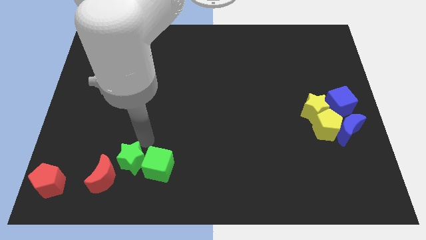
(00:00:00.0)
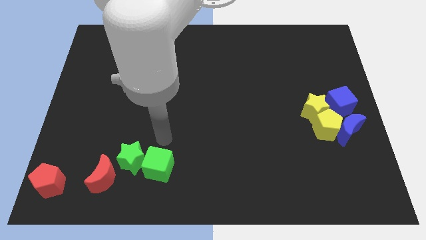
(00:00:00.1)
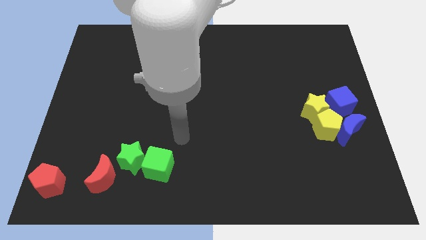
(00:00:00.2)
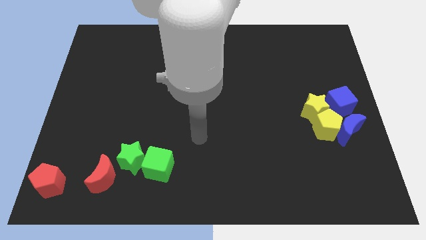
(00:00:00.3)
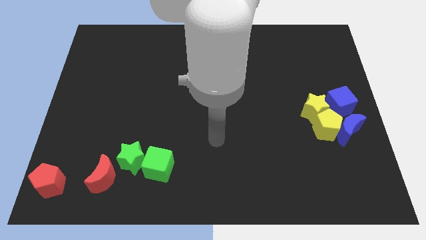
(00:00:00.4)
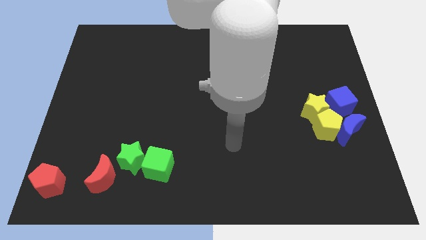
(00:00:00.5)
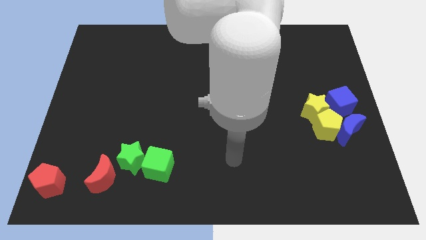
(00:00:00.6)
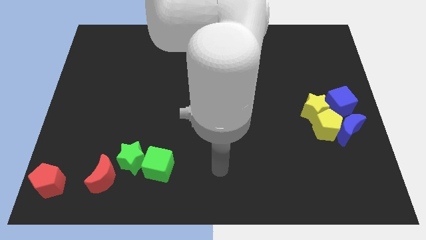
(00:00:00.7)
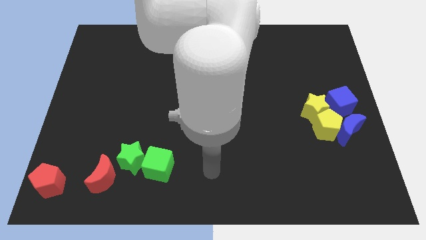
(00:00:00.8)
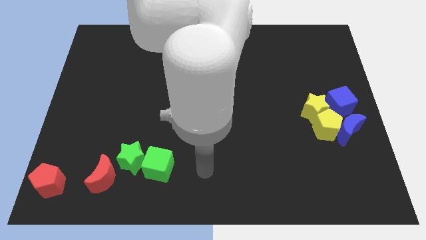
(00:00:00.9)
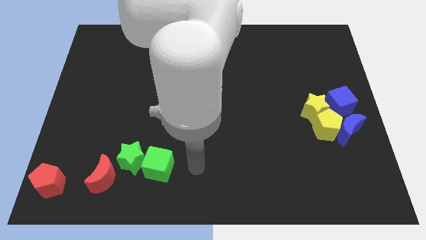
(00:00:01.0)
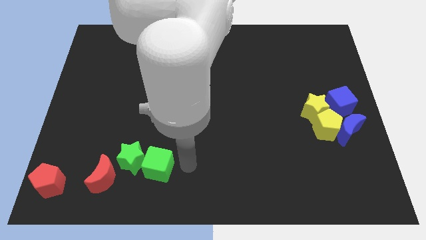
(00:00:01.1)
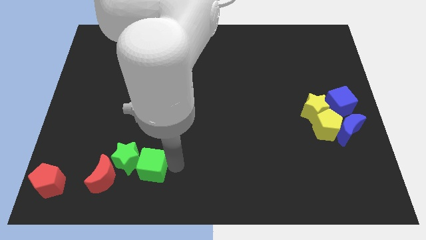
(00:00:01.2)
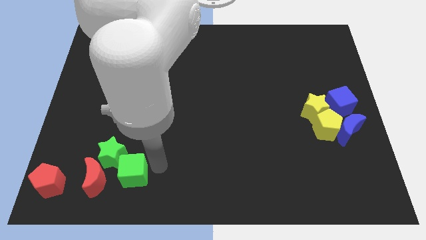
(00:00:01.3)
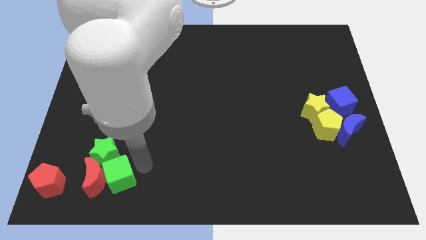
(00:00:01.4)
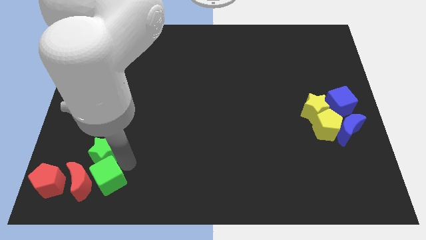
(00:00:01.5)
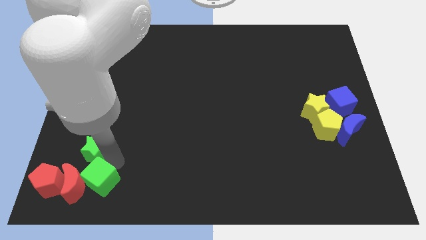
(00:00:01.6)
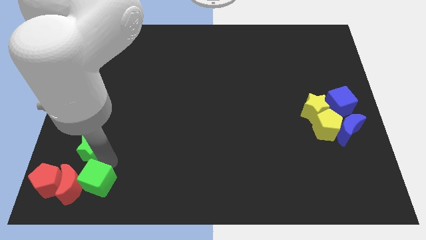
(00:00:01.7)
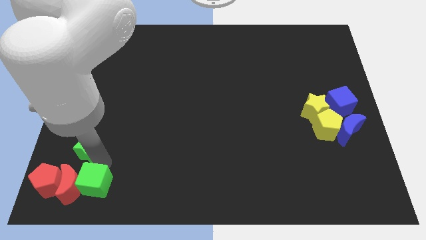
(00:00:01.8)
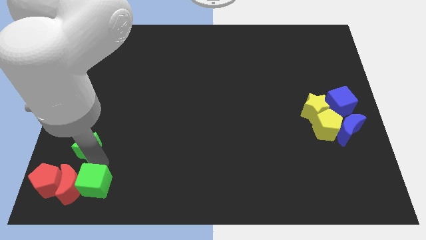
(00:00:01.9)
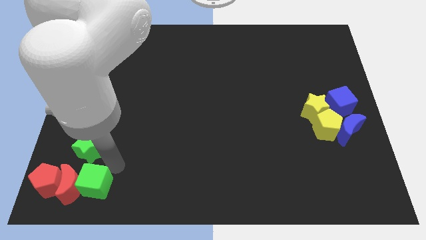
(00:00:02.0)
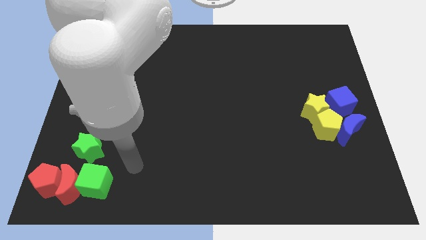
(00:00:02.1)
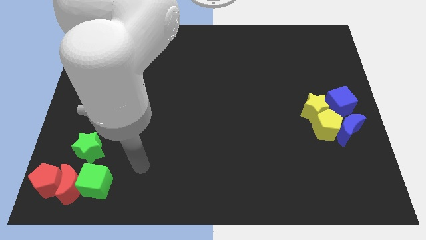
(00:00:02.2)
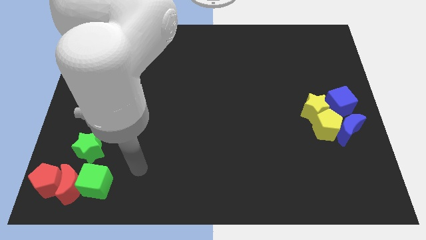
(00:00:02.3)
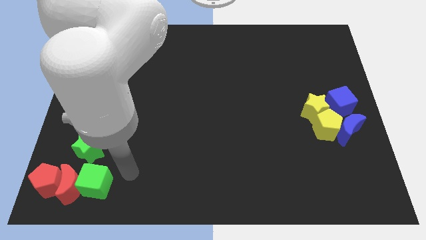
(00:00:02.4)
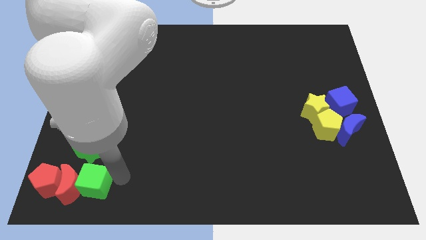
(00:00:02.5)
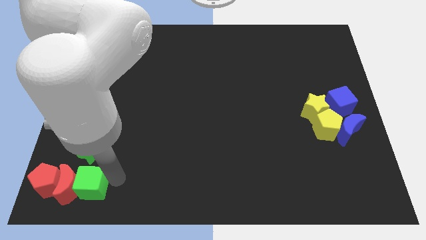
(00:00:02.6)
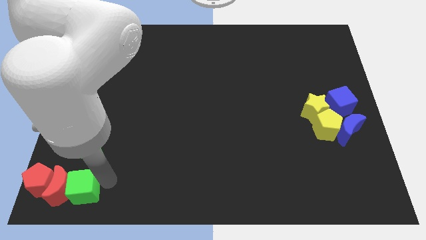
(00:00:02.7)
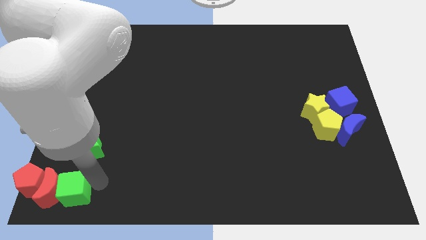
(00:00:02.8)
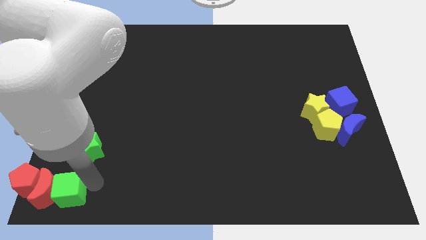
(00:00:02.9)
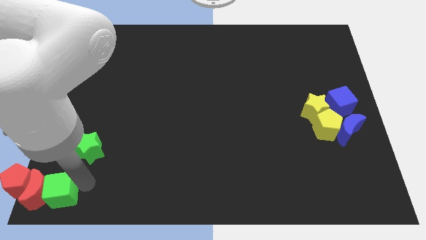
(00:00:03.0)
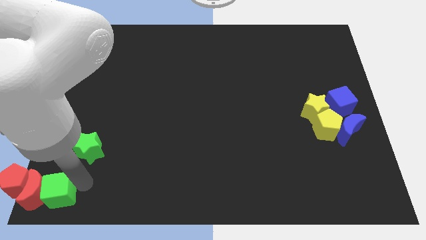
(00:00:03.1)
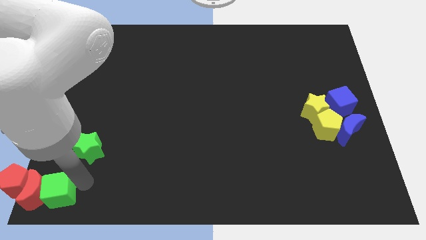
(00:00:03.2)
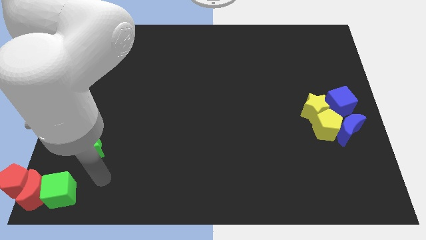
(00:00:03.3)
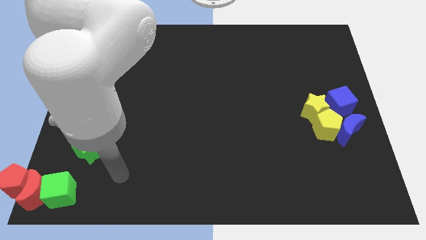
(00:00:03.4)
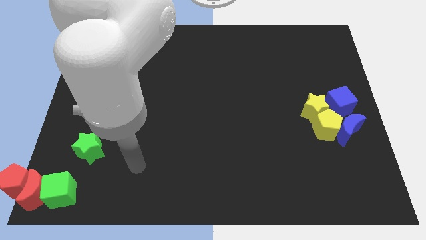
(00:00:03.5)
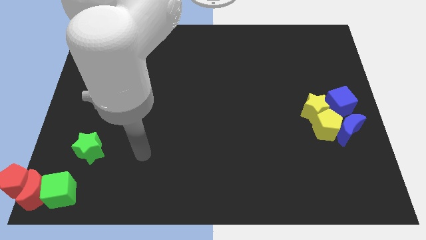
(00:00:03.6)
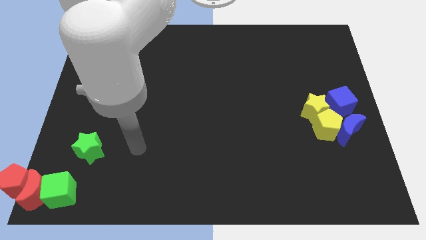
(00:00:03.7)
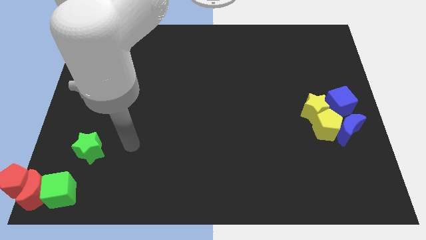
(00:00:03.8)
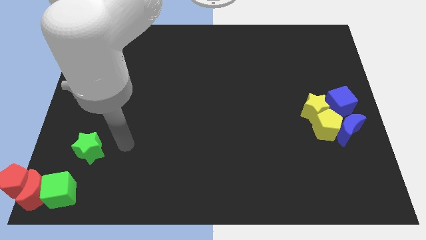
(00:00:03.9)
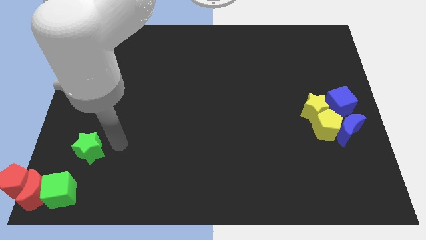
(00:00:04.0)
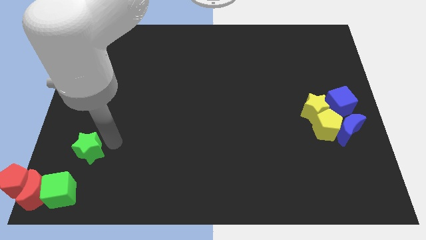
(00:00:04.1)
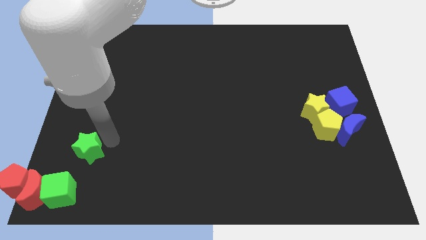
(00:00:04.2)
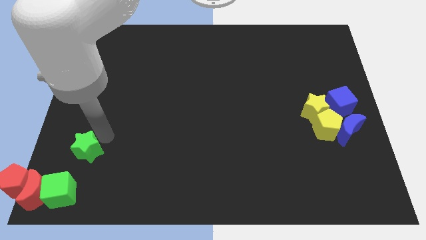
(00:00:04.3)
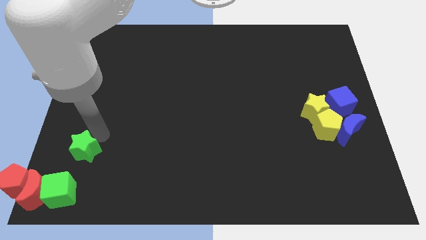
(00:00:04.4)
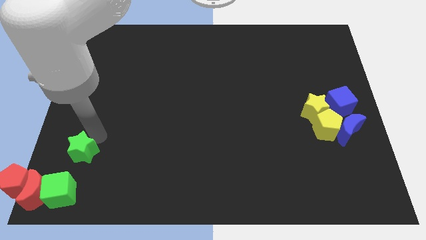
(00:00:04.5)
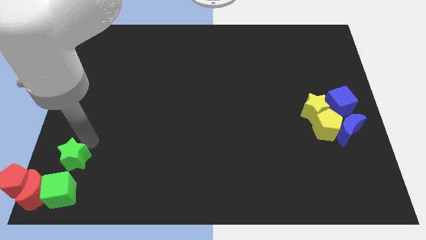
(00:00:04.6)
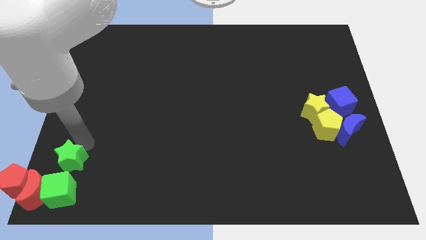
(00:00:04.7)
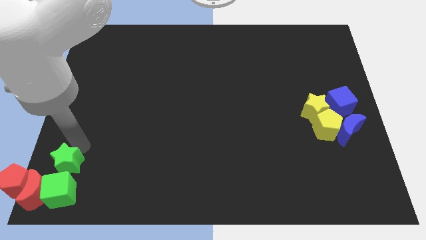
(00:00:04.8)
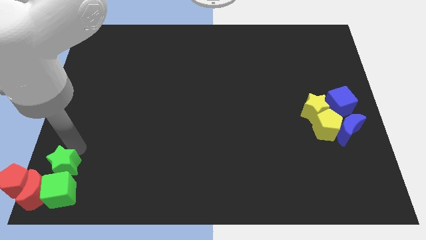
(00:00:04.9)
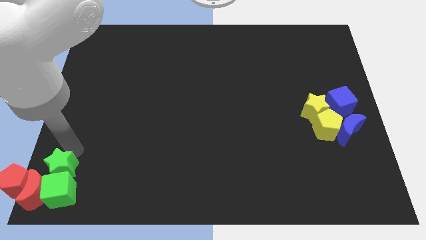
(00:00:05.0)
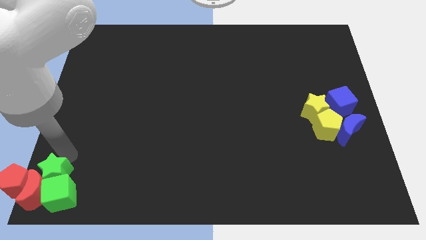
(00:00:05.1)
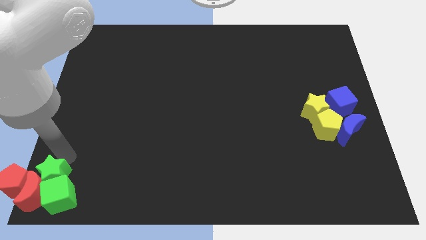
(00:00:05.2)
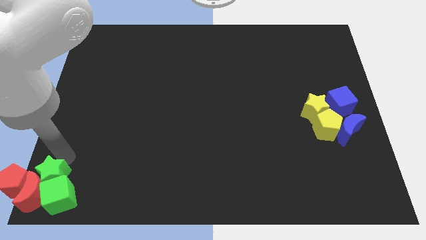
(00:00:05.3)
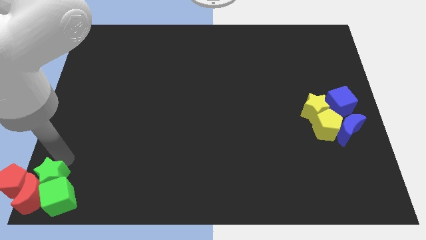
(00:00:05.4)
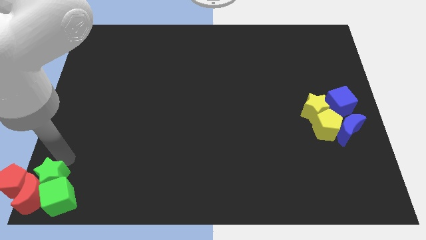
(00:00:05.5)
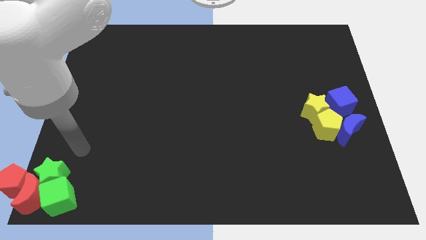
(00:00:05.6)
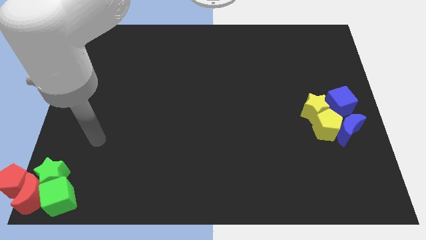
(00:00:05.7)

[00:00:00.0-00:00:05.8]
move the green blocks into the red blocks

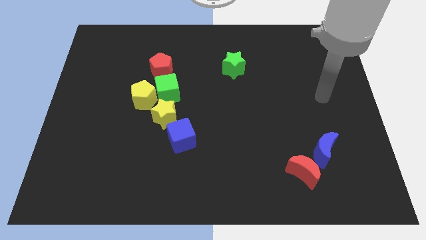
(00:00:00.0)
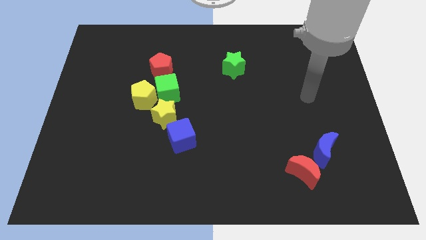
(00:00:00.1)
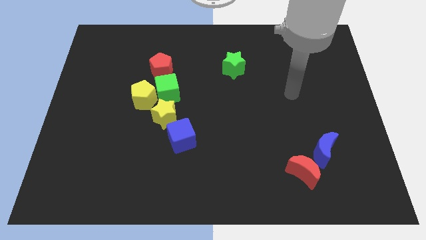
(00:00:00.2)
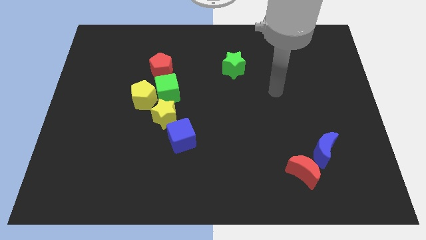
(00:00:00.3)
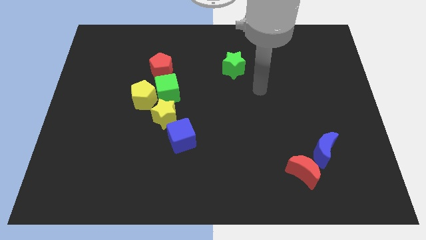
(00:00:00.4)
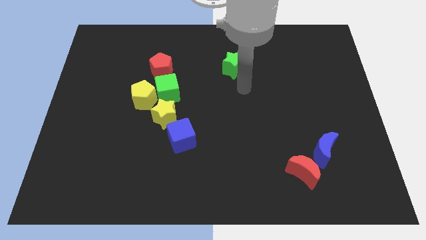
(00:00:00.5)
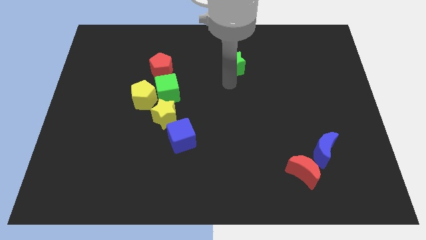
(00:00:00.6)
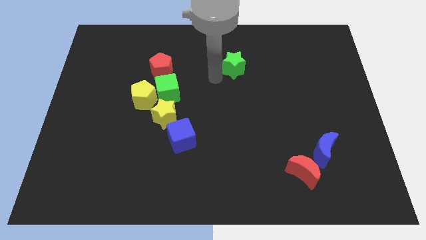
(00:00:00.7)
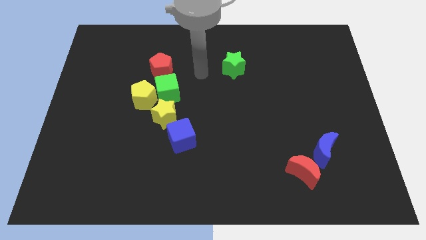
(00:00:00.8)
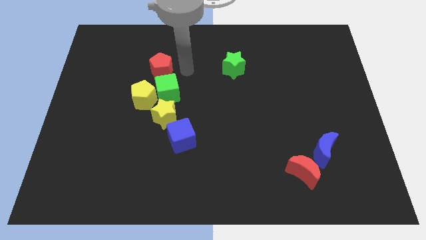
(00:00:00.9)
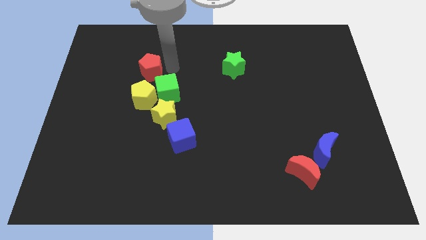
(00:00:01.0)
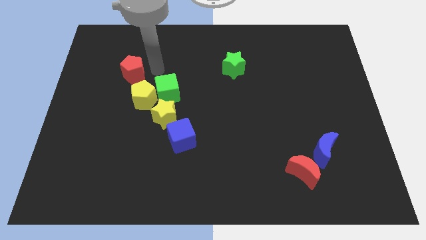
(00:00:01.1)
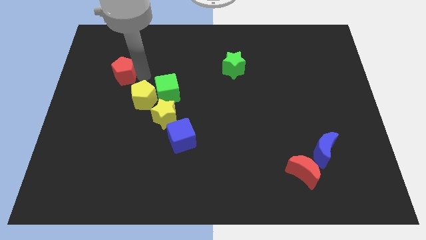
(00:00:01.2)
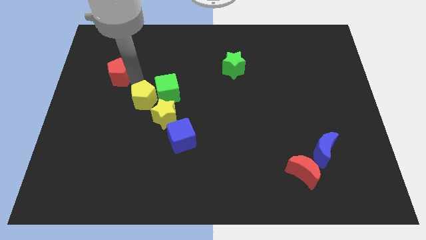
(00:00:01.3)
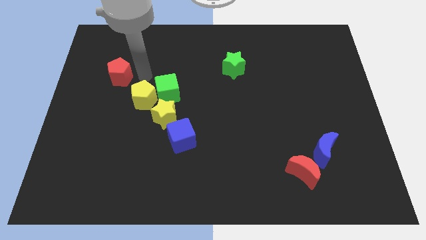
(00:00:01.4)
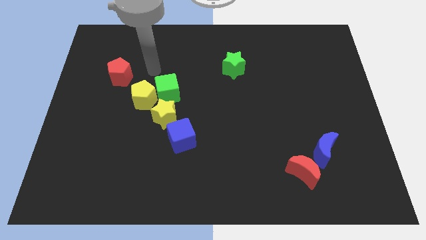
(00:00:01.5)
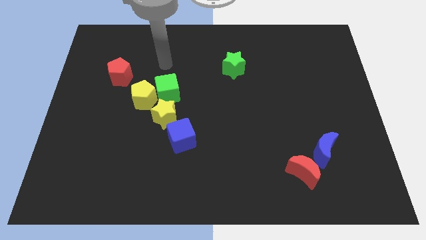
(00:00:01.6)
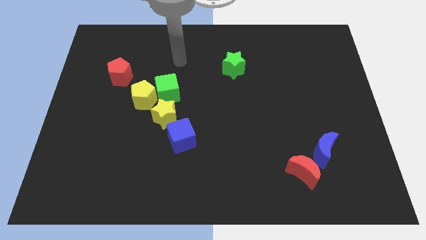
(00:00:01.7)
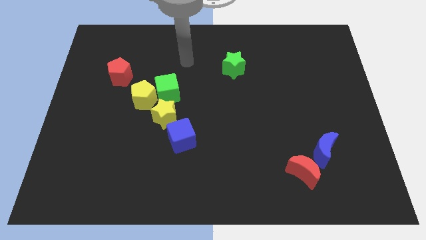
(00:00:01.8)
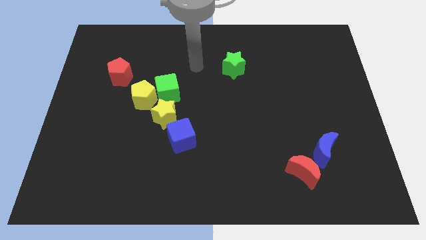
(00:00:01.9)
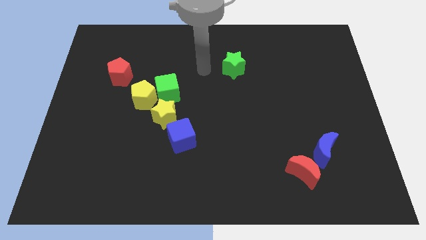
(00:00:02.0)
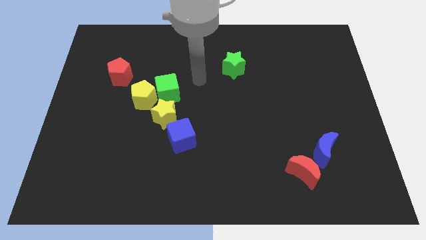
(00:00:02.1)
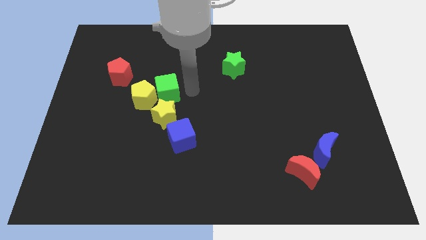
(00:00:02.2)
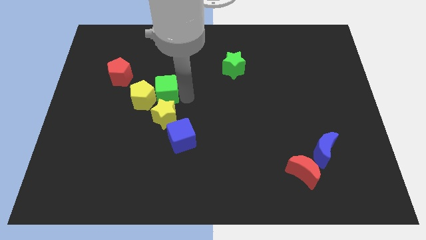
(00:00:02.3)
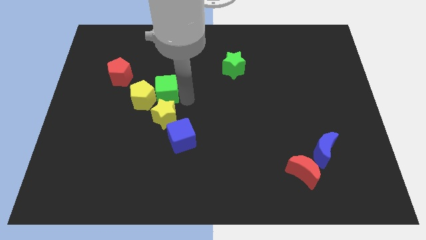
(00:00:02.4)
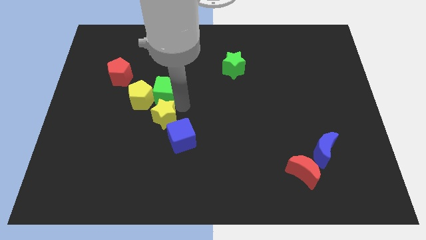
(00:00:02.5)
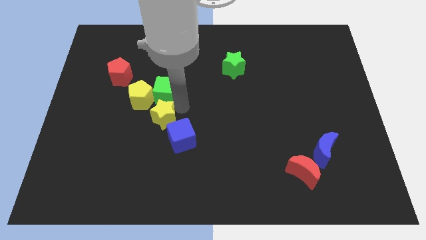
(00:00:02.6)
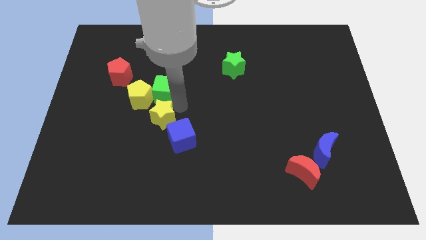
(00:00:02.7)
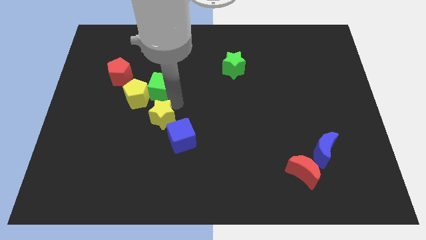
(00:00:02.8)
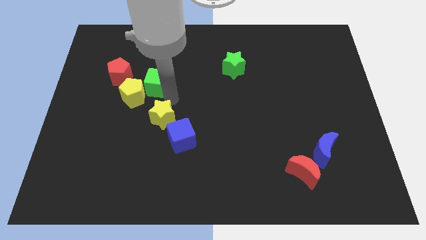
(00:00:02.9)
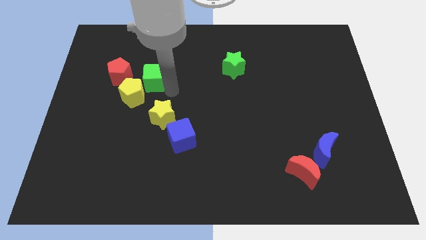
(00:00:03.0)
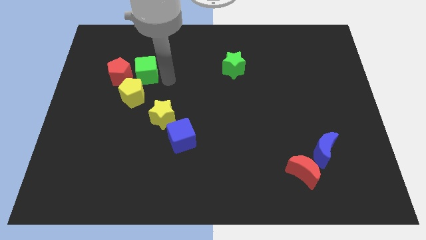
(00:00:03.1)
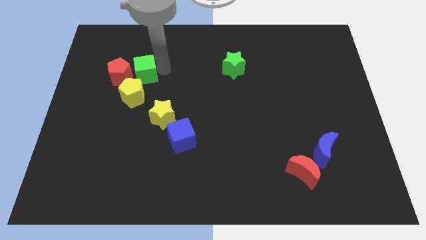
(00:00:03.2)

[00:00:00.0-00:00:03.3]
move green cube above yellow pentagon
